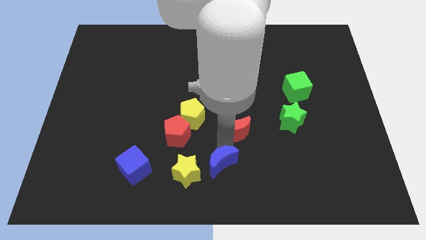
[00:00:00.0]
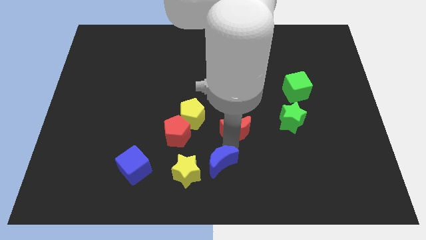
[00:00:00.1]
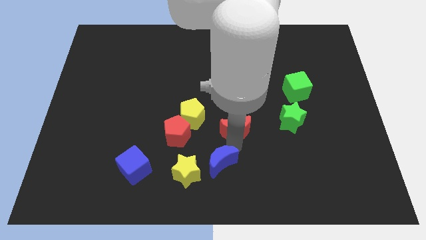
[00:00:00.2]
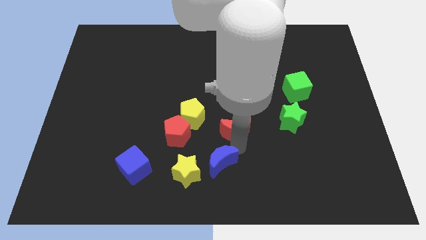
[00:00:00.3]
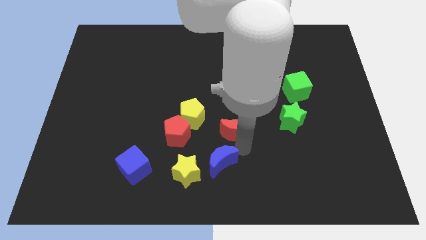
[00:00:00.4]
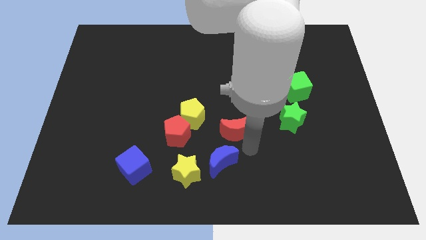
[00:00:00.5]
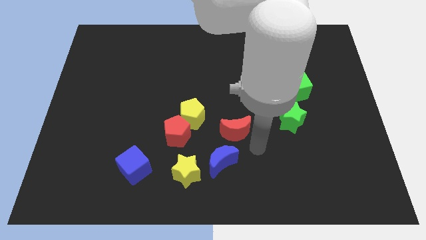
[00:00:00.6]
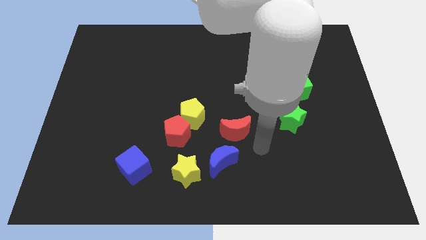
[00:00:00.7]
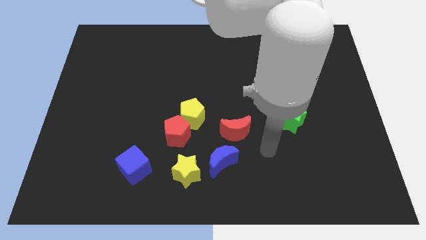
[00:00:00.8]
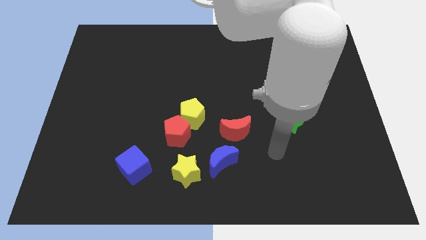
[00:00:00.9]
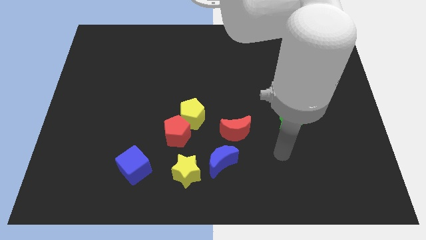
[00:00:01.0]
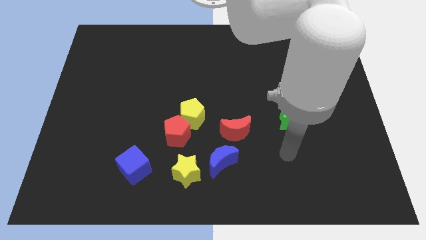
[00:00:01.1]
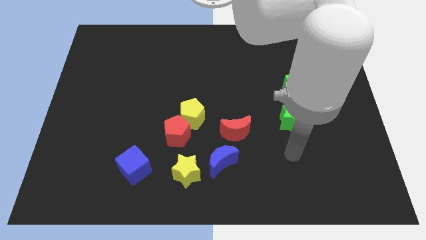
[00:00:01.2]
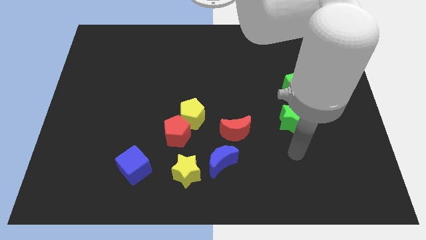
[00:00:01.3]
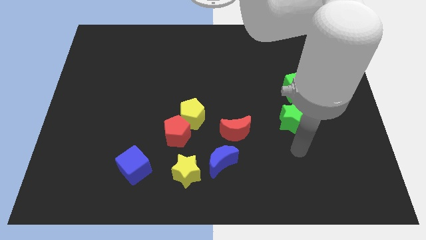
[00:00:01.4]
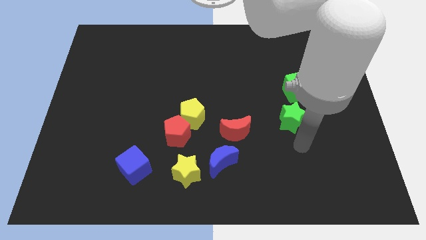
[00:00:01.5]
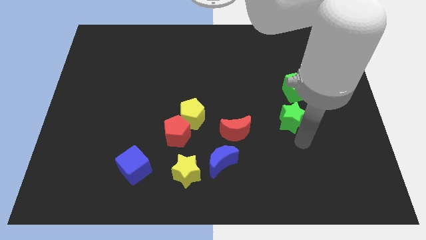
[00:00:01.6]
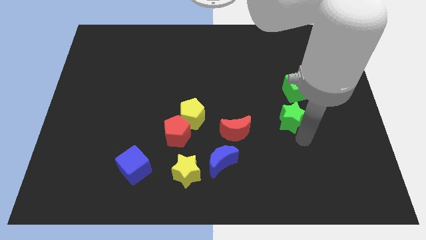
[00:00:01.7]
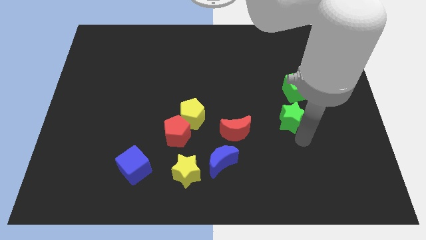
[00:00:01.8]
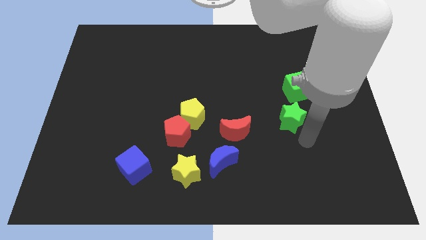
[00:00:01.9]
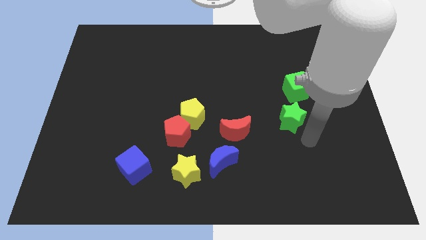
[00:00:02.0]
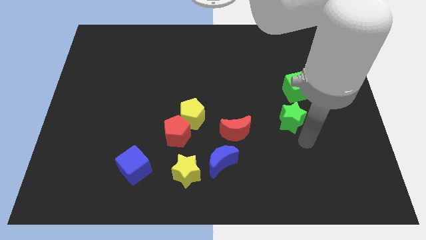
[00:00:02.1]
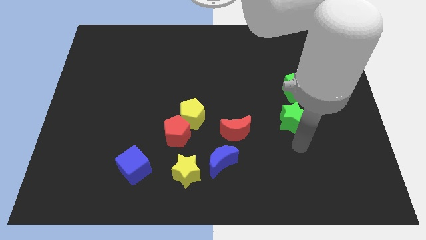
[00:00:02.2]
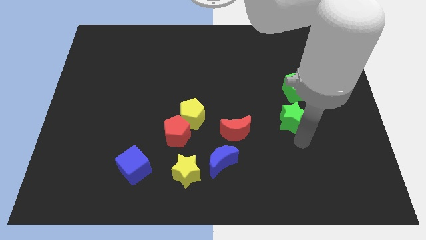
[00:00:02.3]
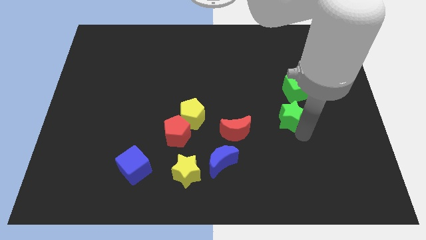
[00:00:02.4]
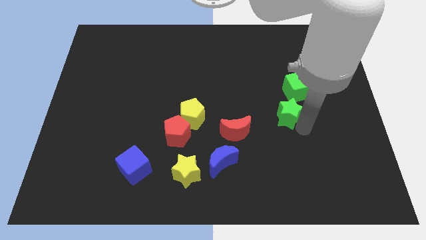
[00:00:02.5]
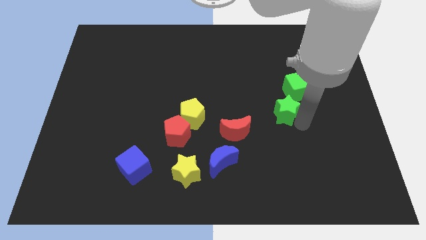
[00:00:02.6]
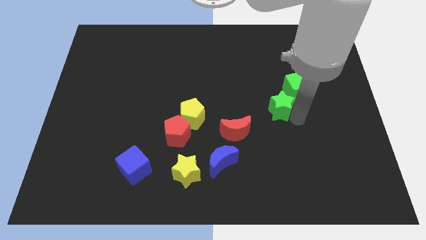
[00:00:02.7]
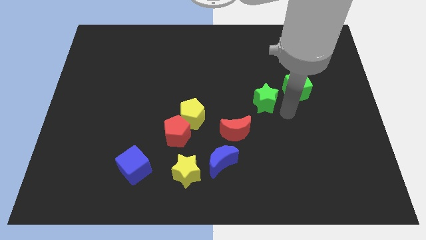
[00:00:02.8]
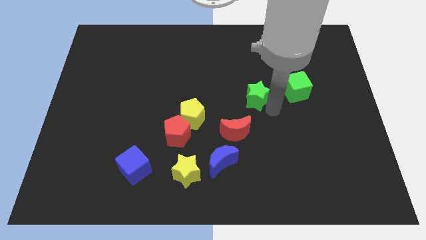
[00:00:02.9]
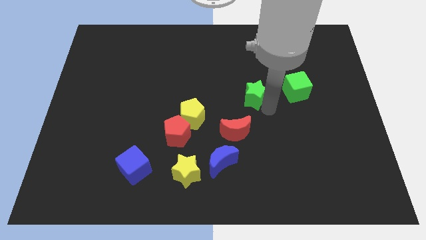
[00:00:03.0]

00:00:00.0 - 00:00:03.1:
place the green star at the left side of green cube

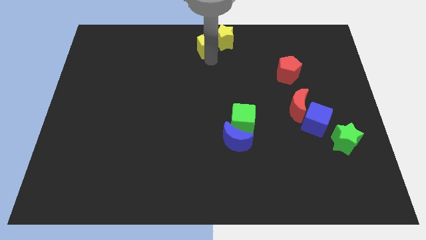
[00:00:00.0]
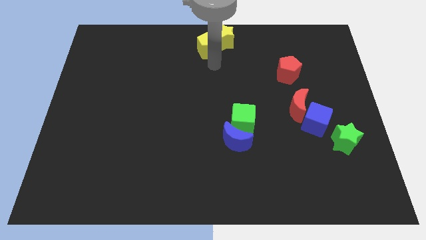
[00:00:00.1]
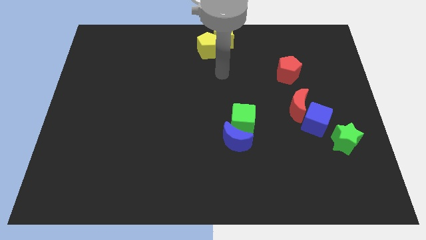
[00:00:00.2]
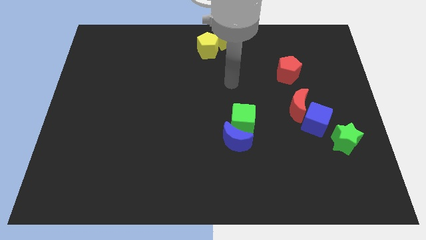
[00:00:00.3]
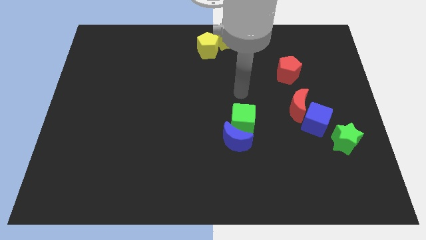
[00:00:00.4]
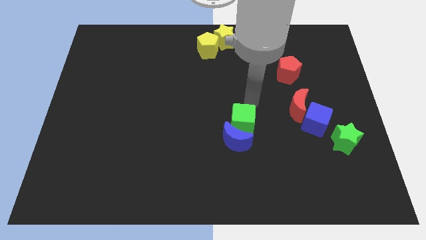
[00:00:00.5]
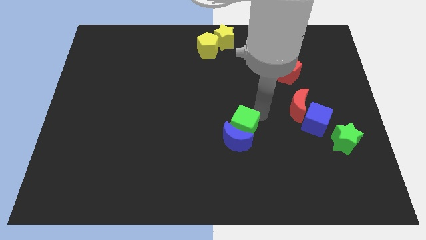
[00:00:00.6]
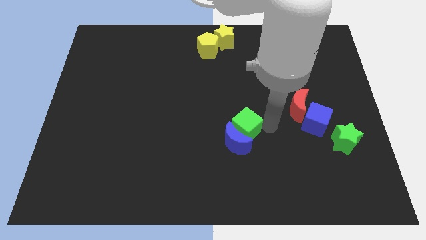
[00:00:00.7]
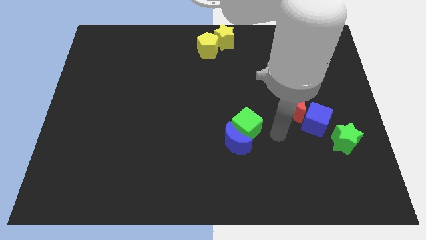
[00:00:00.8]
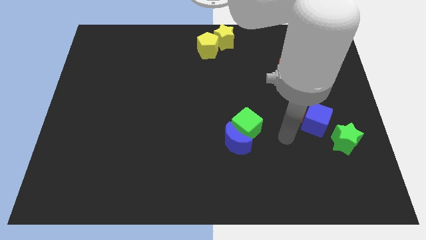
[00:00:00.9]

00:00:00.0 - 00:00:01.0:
slightly push the green cube and blue moon towards the left side

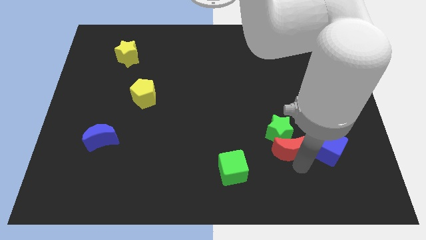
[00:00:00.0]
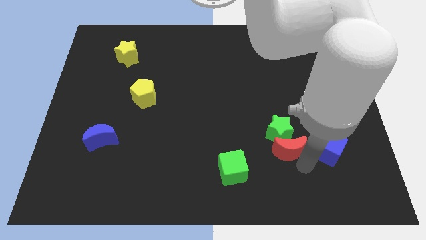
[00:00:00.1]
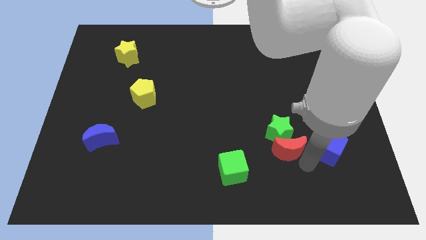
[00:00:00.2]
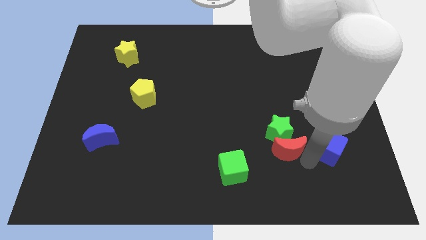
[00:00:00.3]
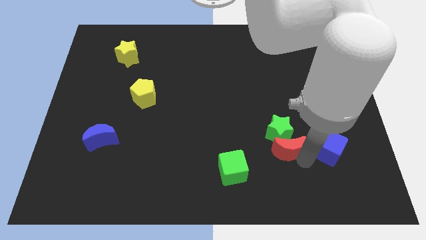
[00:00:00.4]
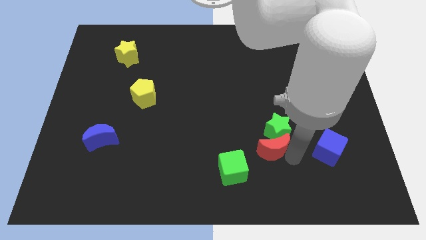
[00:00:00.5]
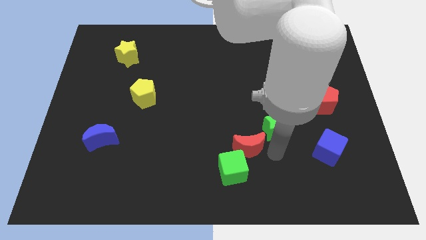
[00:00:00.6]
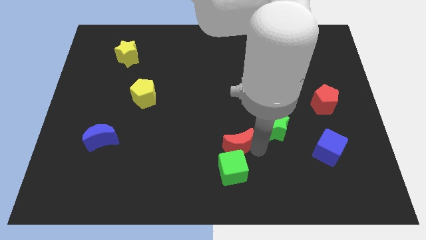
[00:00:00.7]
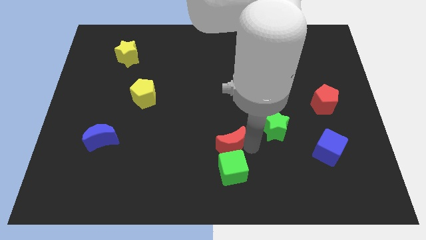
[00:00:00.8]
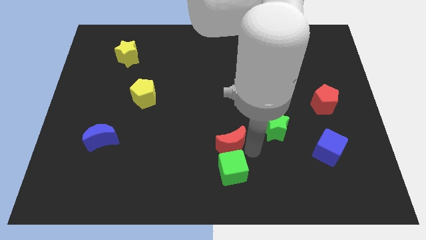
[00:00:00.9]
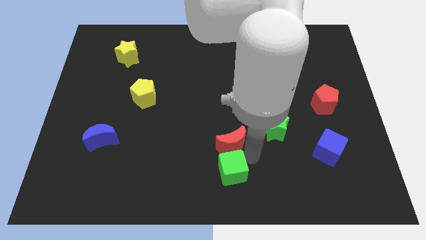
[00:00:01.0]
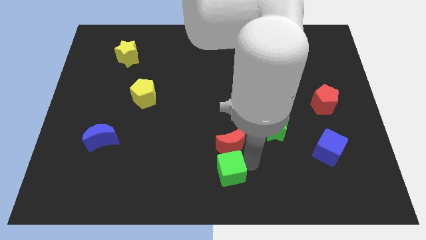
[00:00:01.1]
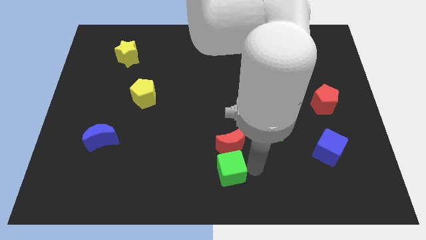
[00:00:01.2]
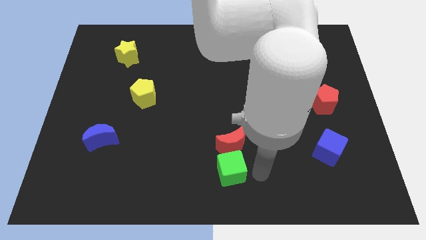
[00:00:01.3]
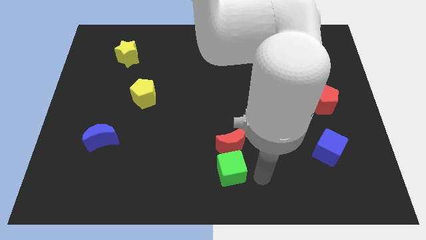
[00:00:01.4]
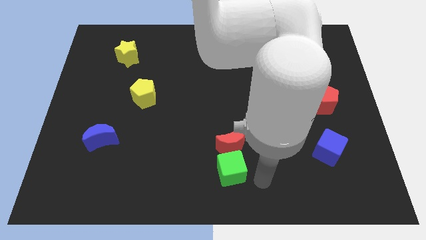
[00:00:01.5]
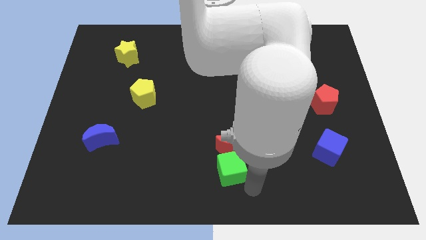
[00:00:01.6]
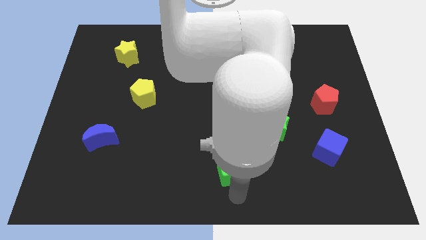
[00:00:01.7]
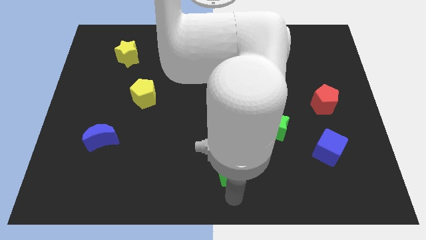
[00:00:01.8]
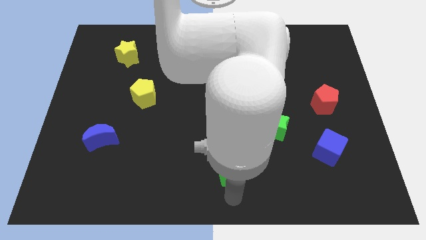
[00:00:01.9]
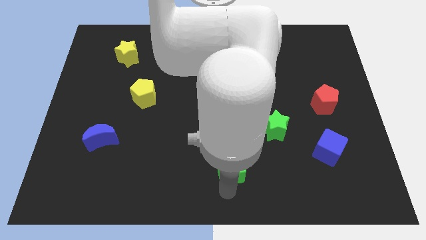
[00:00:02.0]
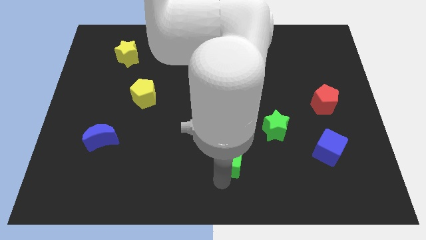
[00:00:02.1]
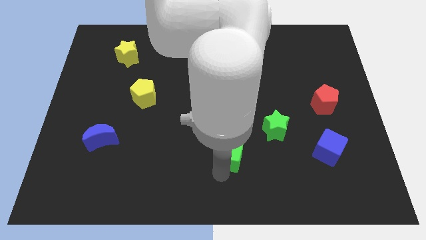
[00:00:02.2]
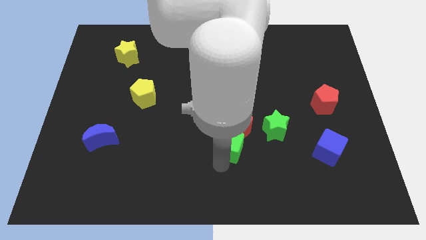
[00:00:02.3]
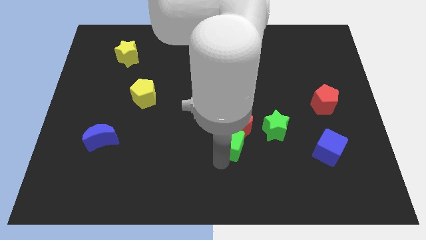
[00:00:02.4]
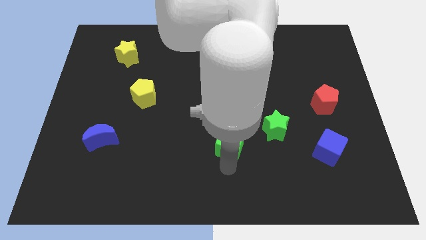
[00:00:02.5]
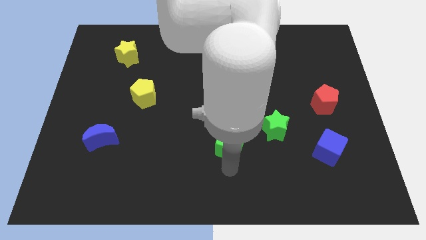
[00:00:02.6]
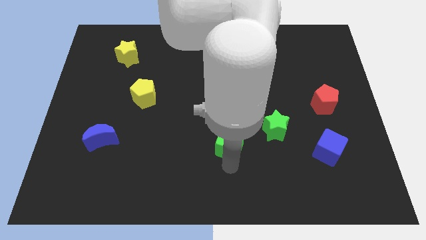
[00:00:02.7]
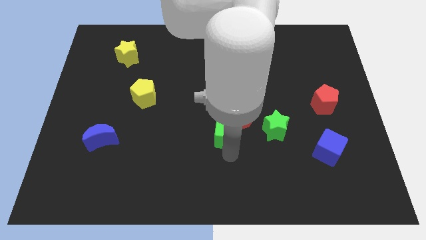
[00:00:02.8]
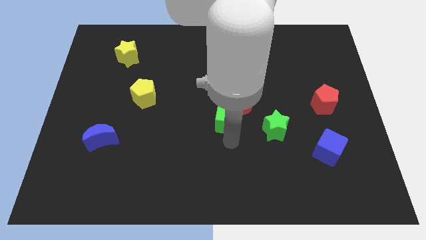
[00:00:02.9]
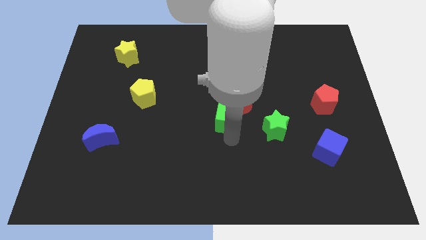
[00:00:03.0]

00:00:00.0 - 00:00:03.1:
push the green cube along with red crescent to the center of the board

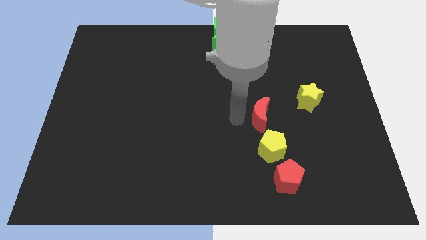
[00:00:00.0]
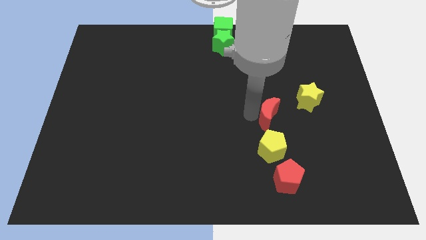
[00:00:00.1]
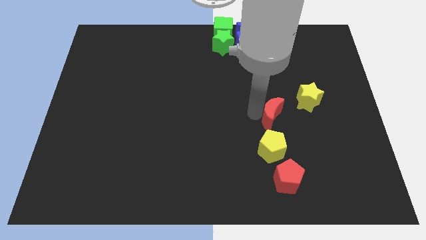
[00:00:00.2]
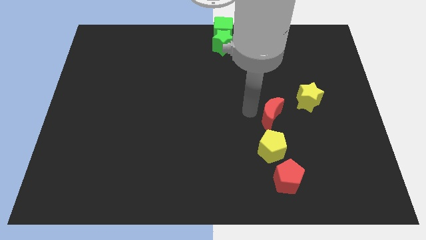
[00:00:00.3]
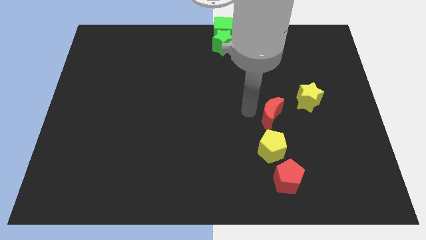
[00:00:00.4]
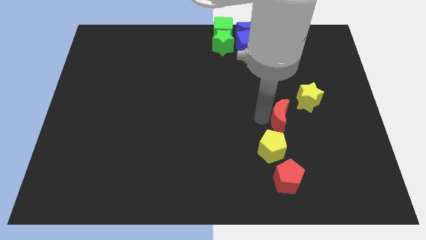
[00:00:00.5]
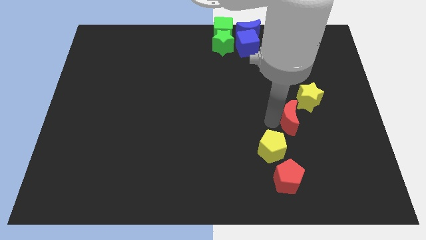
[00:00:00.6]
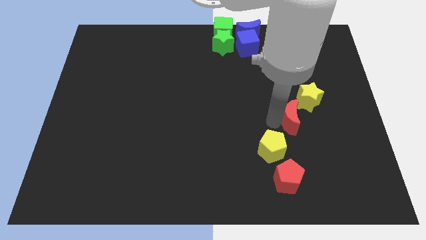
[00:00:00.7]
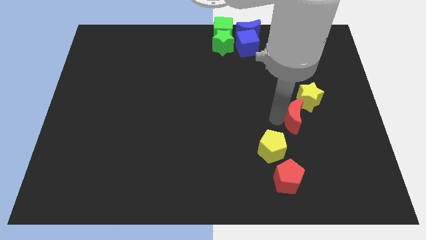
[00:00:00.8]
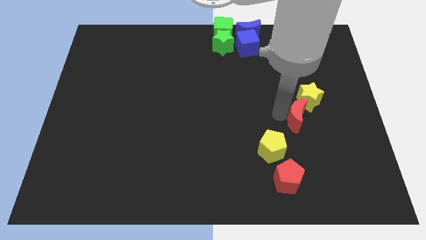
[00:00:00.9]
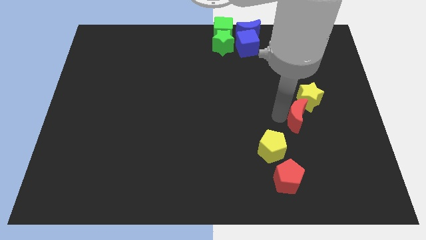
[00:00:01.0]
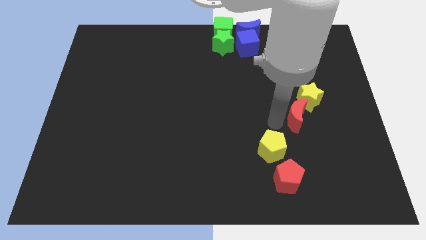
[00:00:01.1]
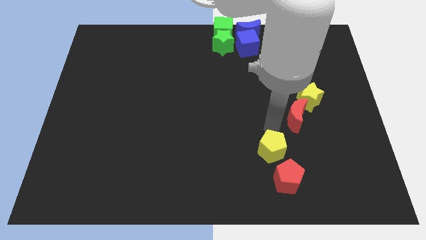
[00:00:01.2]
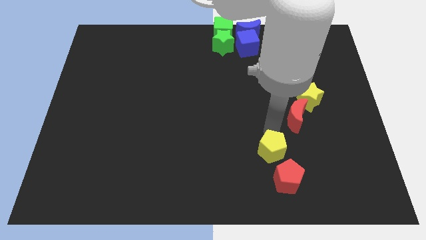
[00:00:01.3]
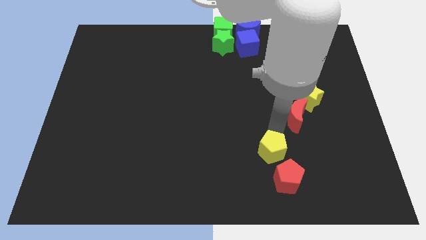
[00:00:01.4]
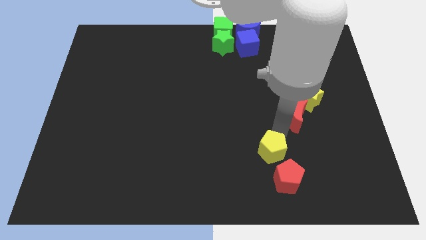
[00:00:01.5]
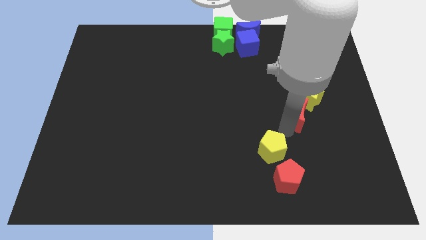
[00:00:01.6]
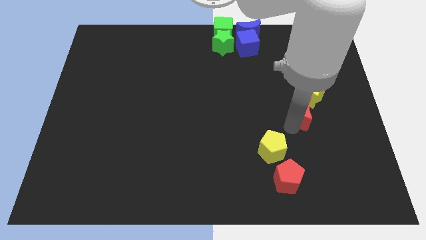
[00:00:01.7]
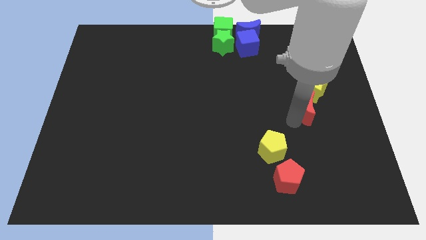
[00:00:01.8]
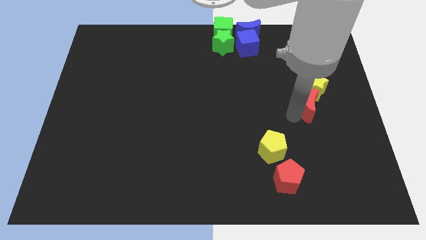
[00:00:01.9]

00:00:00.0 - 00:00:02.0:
push the red crescent into the yellow star
